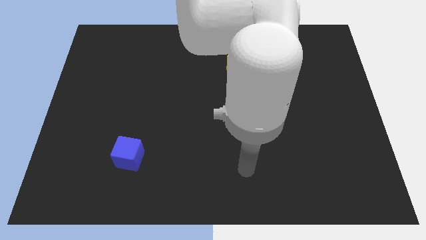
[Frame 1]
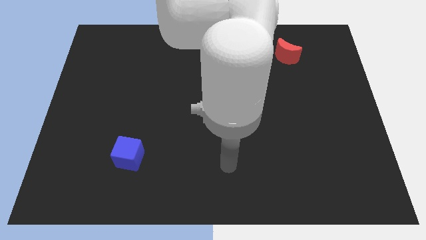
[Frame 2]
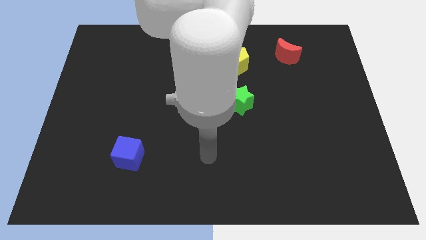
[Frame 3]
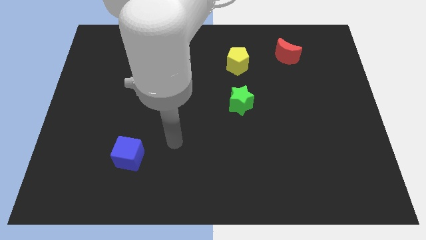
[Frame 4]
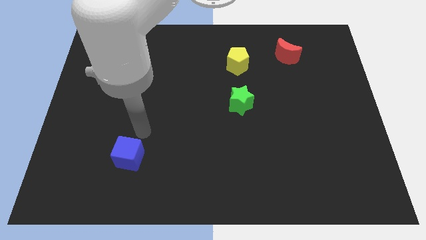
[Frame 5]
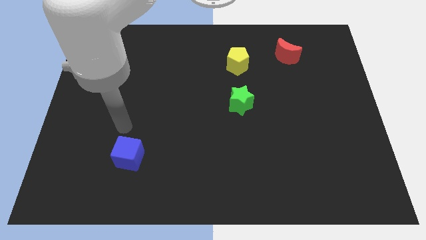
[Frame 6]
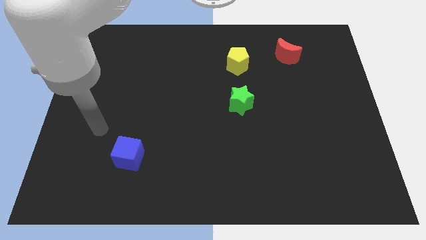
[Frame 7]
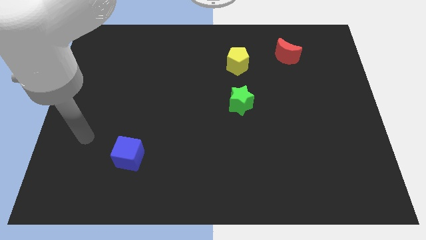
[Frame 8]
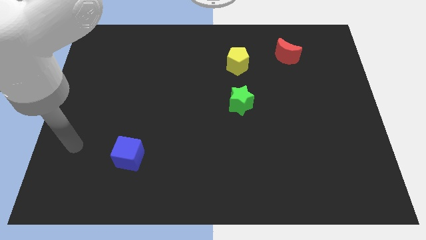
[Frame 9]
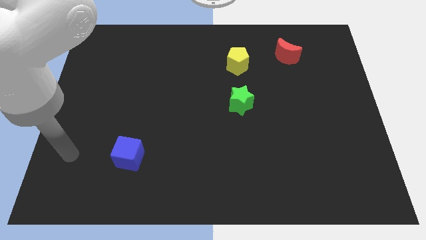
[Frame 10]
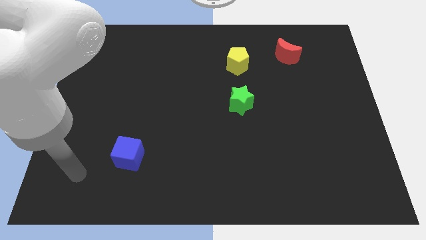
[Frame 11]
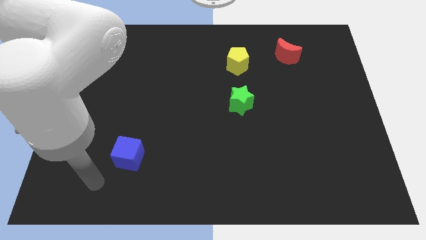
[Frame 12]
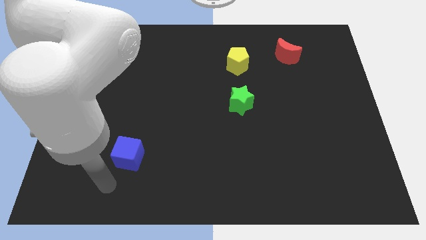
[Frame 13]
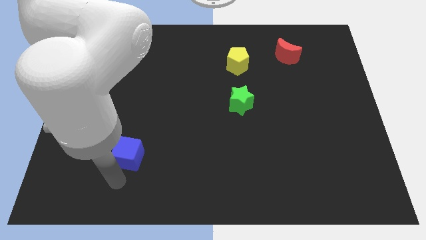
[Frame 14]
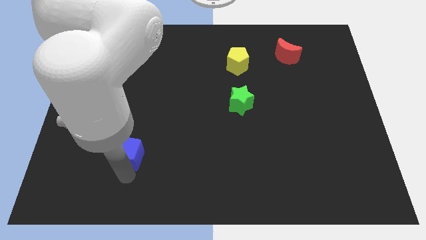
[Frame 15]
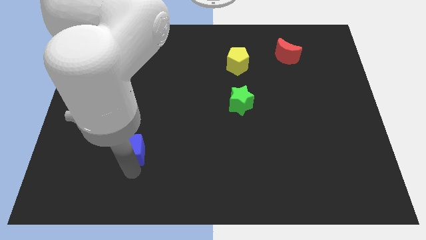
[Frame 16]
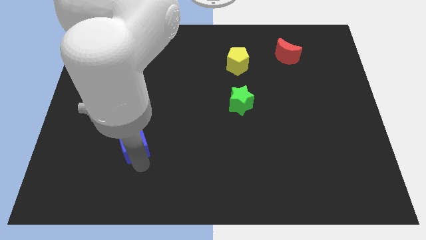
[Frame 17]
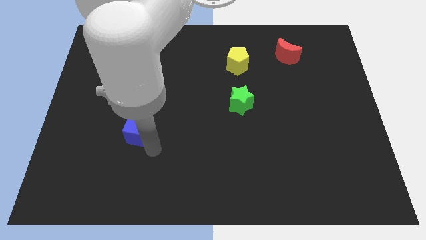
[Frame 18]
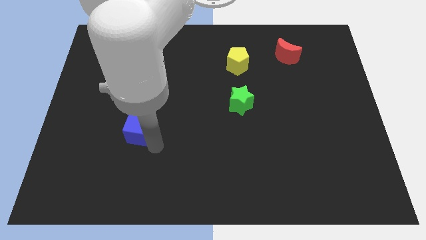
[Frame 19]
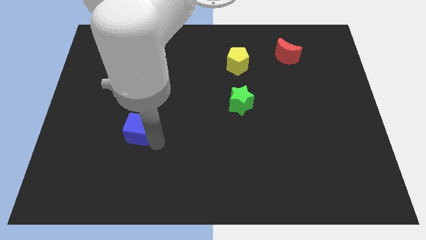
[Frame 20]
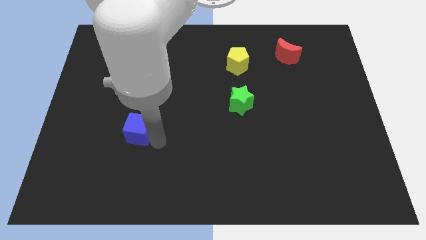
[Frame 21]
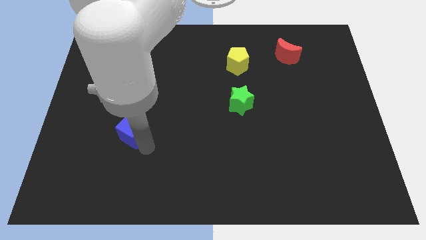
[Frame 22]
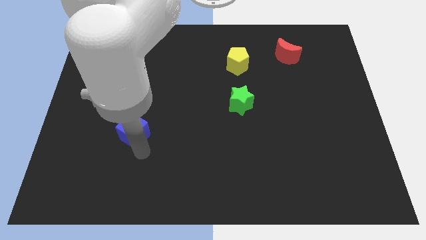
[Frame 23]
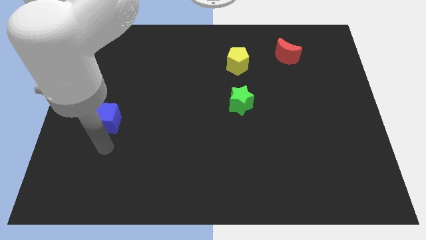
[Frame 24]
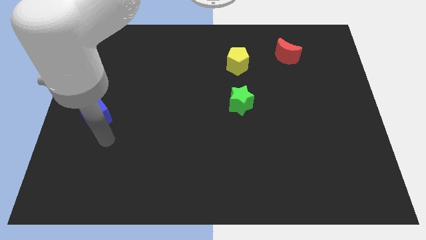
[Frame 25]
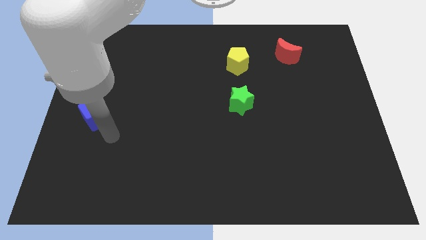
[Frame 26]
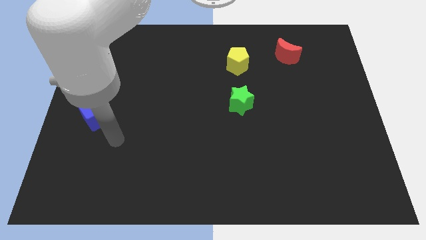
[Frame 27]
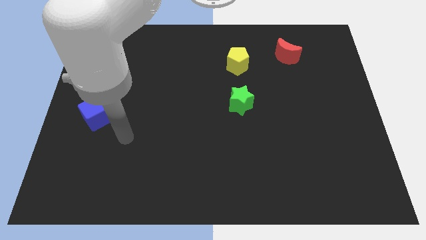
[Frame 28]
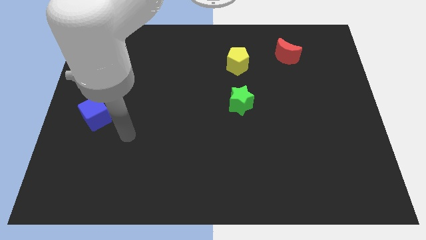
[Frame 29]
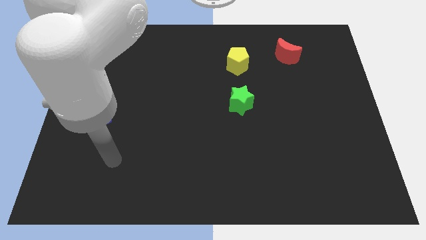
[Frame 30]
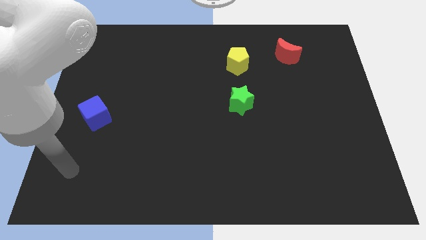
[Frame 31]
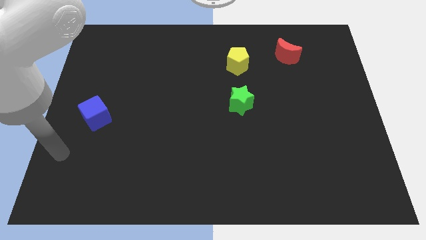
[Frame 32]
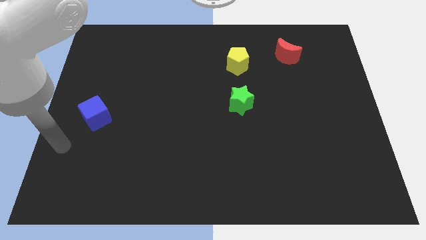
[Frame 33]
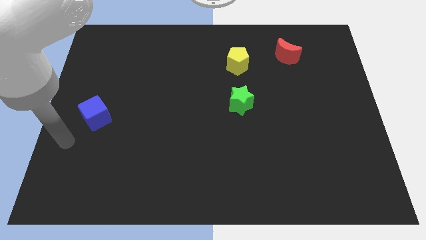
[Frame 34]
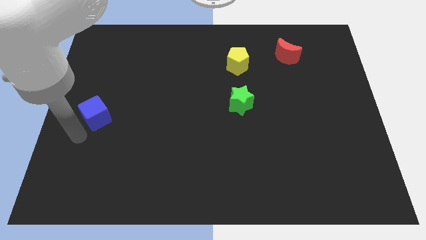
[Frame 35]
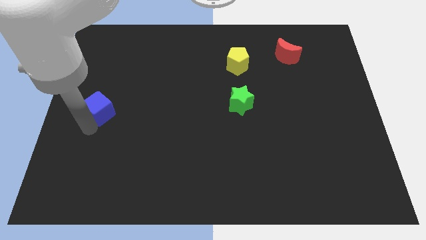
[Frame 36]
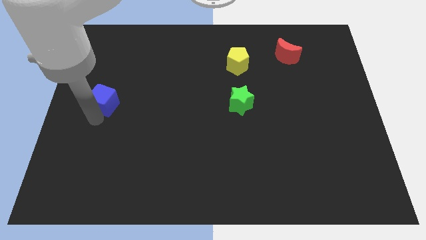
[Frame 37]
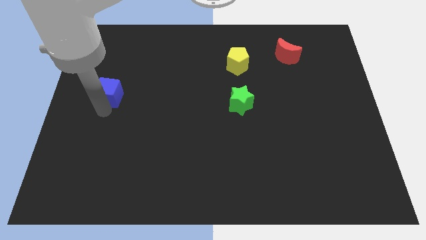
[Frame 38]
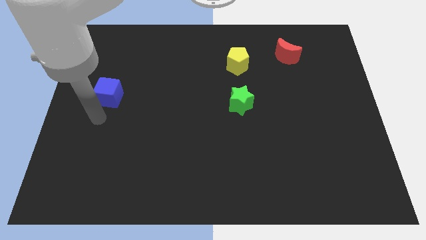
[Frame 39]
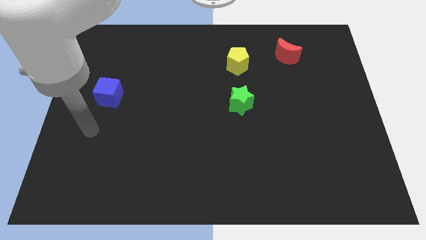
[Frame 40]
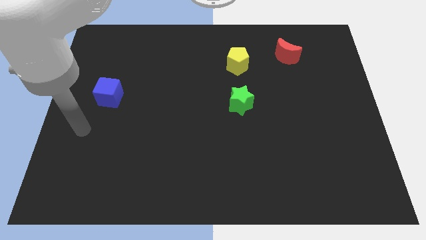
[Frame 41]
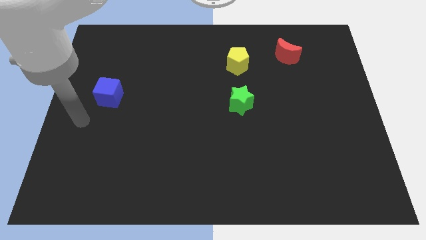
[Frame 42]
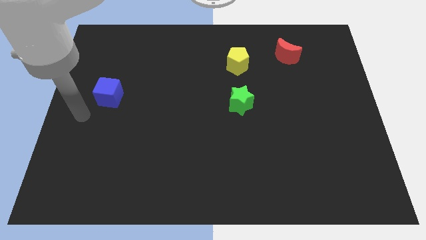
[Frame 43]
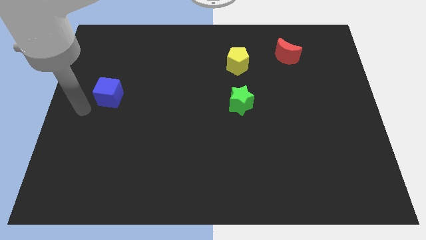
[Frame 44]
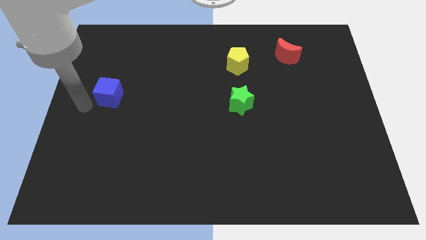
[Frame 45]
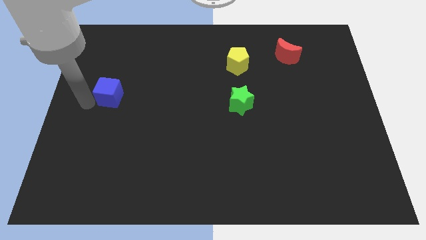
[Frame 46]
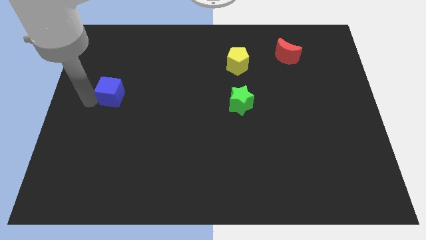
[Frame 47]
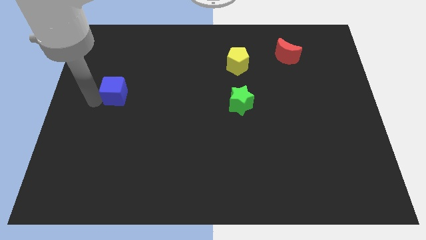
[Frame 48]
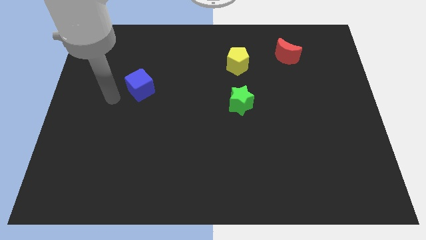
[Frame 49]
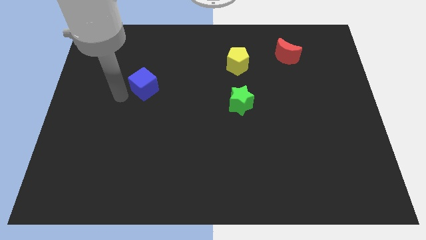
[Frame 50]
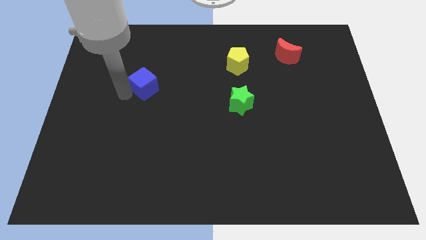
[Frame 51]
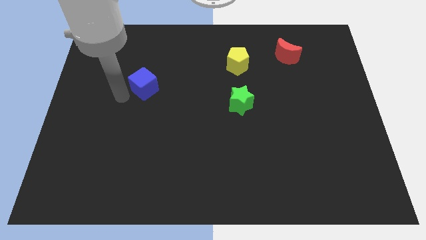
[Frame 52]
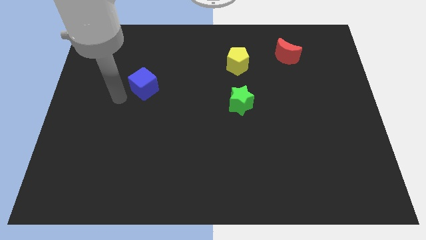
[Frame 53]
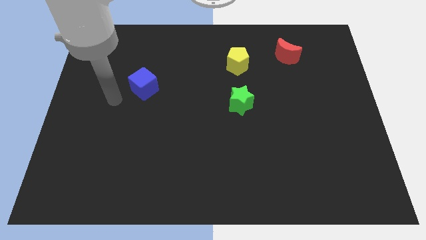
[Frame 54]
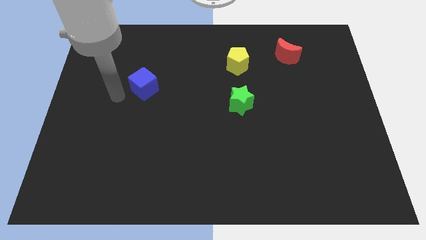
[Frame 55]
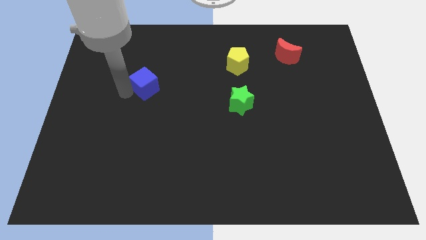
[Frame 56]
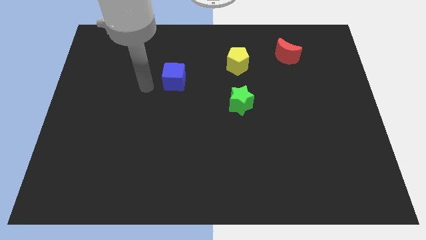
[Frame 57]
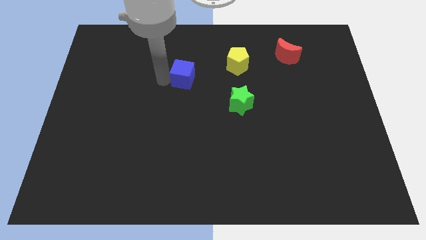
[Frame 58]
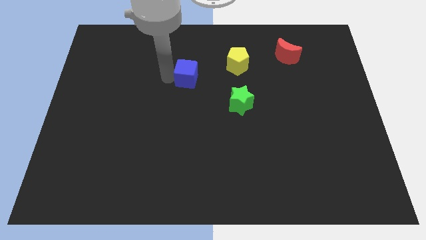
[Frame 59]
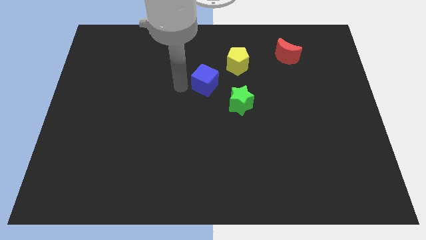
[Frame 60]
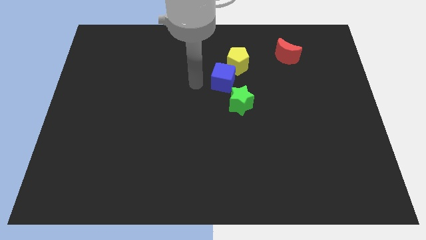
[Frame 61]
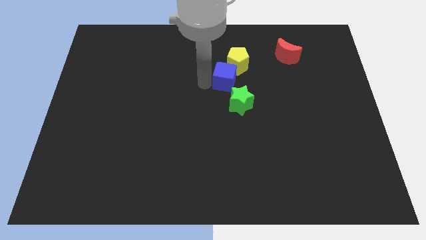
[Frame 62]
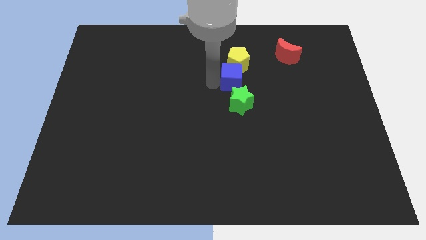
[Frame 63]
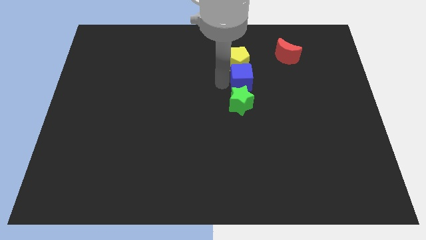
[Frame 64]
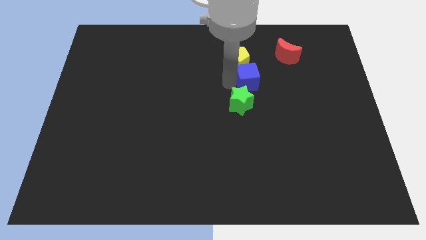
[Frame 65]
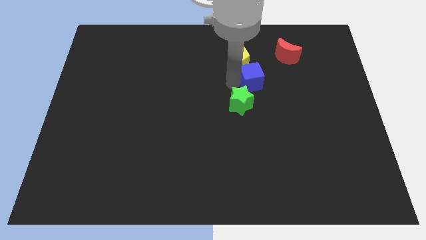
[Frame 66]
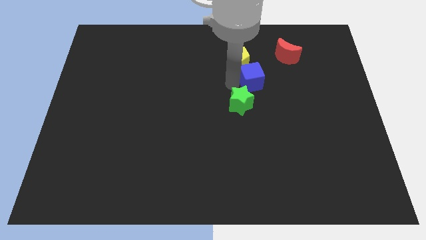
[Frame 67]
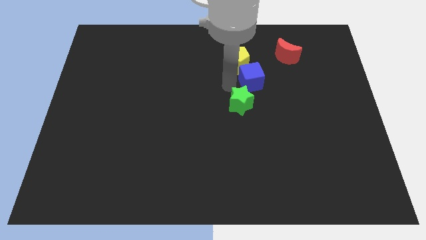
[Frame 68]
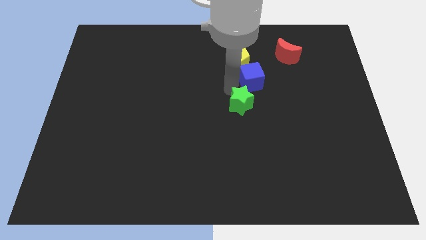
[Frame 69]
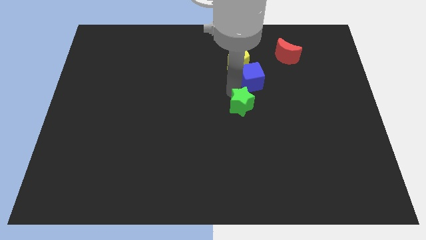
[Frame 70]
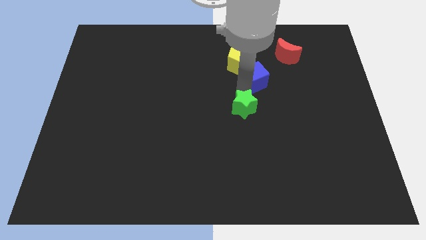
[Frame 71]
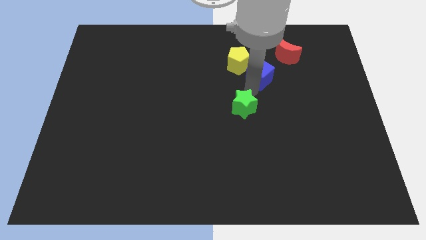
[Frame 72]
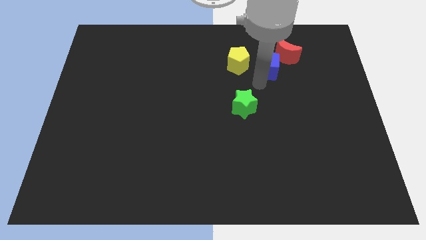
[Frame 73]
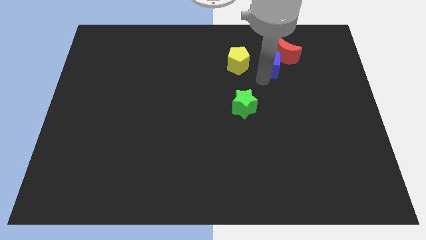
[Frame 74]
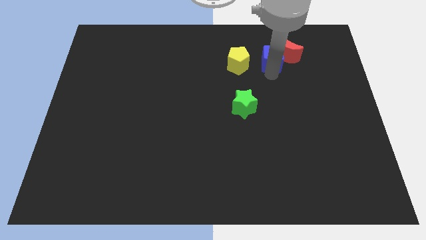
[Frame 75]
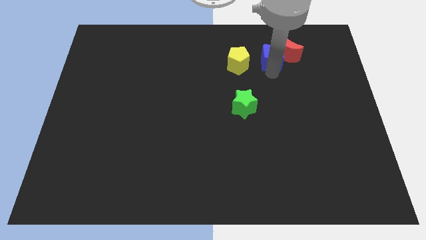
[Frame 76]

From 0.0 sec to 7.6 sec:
move the cube close to the moon

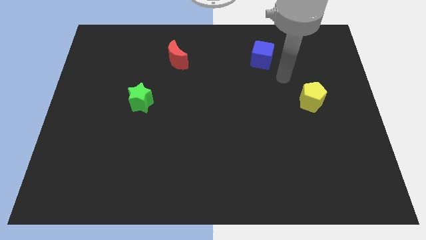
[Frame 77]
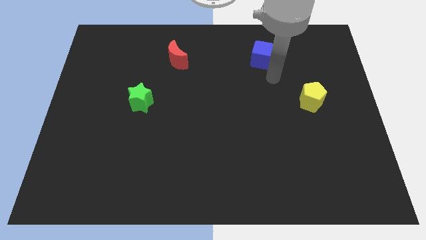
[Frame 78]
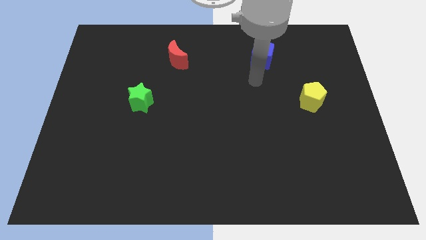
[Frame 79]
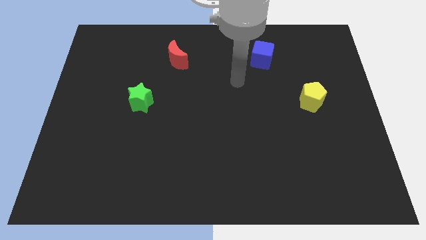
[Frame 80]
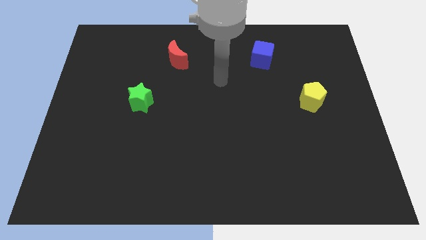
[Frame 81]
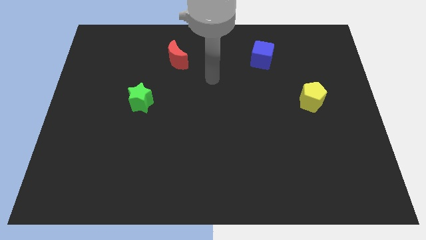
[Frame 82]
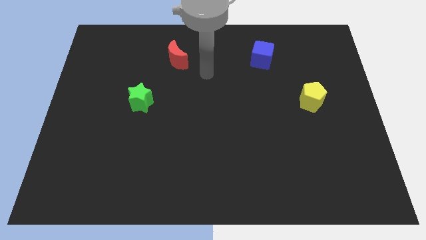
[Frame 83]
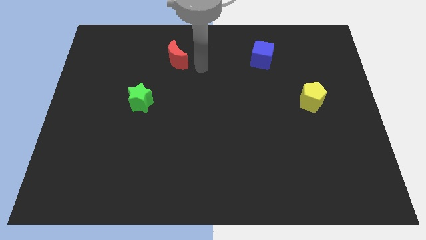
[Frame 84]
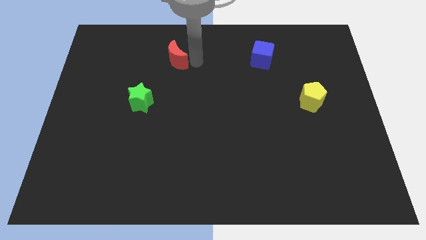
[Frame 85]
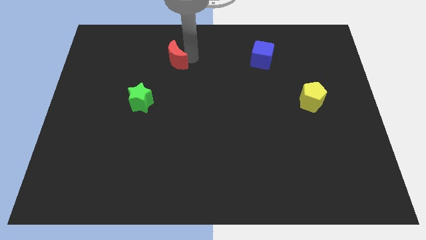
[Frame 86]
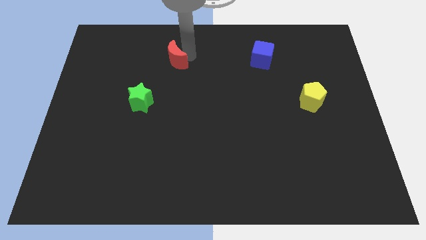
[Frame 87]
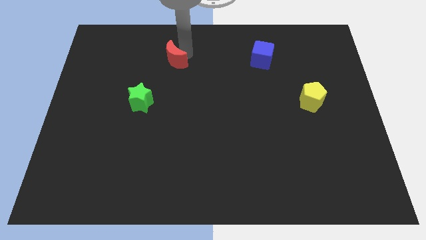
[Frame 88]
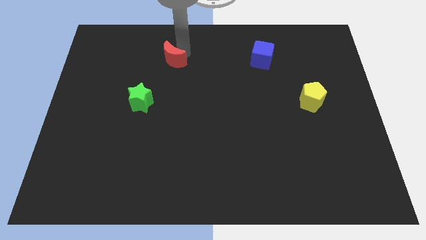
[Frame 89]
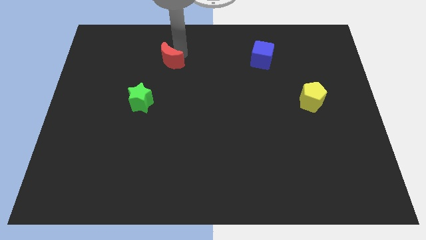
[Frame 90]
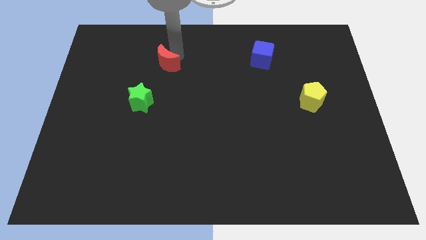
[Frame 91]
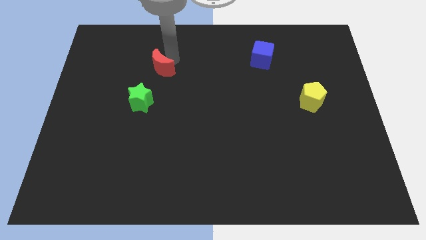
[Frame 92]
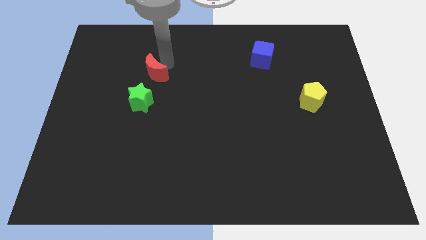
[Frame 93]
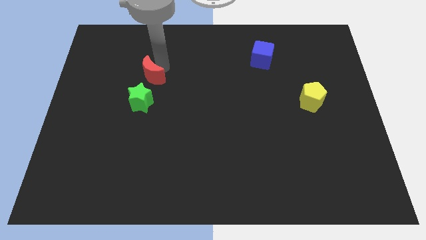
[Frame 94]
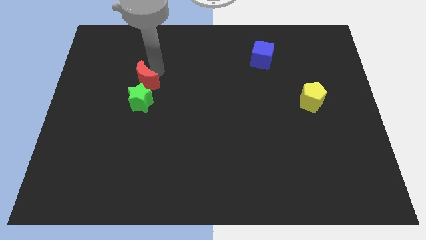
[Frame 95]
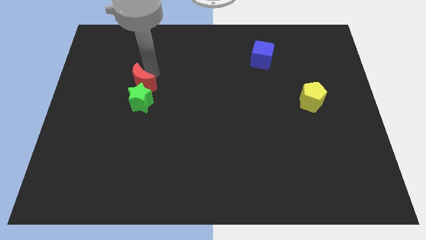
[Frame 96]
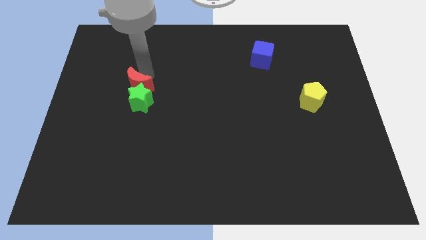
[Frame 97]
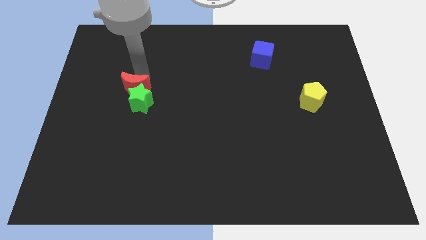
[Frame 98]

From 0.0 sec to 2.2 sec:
move the red block next to the green block
